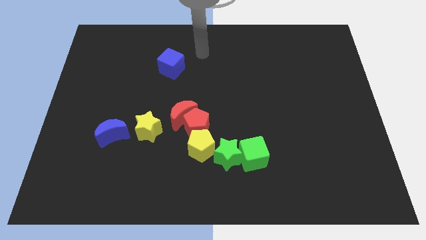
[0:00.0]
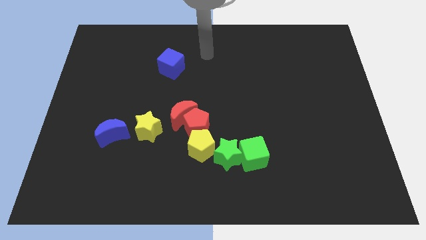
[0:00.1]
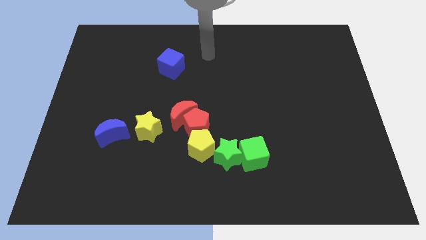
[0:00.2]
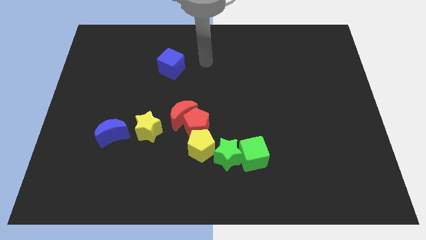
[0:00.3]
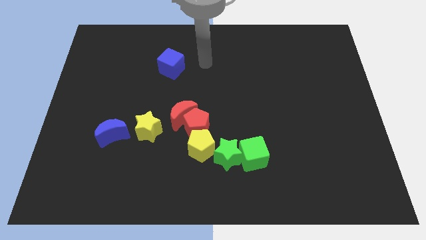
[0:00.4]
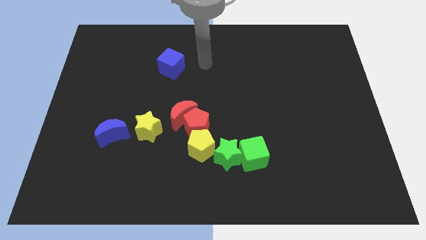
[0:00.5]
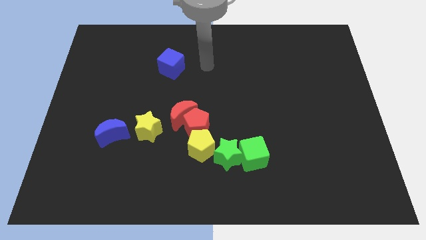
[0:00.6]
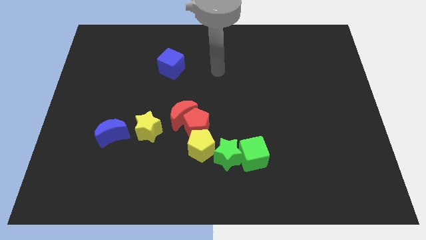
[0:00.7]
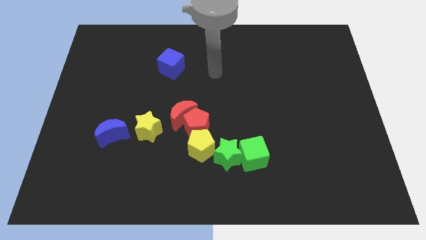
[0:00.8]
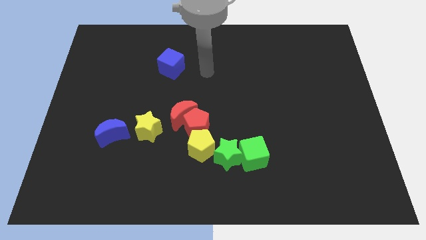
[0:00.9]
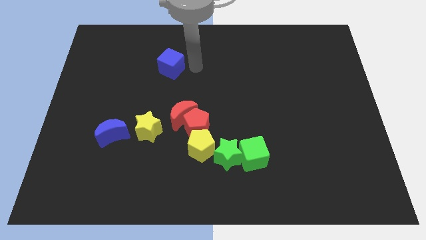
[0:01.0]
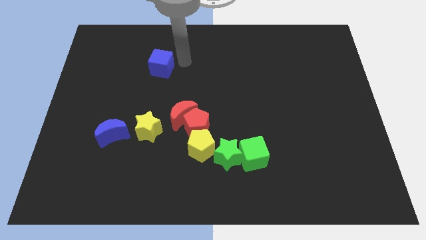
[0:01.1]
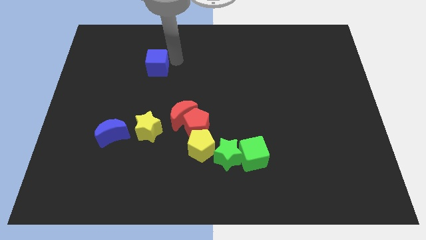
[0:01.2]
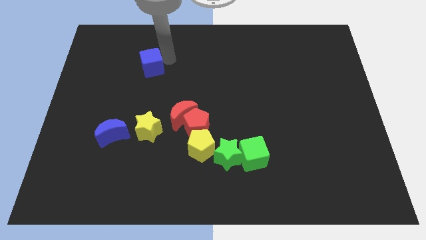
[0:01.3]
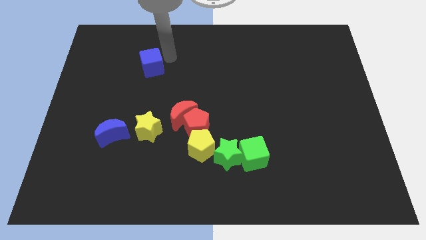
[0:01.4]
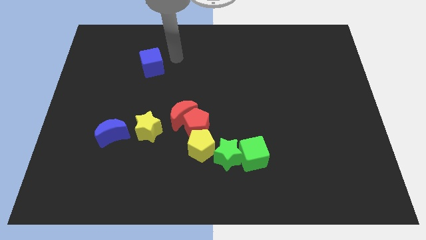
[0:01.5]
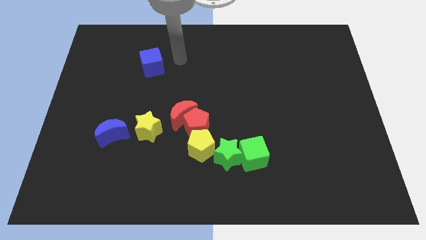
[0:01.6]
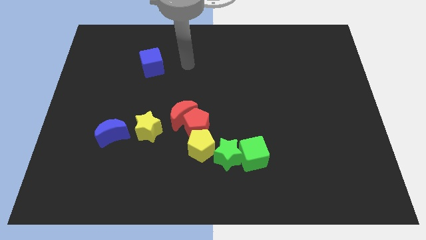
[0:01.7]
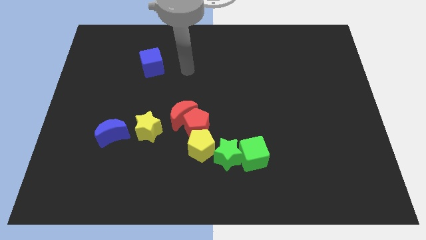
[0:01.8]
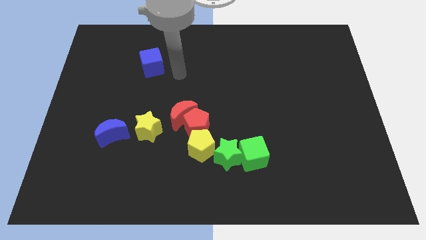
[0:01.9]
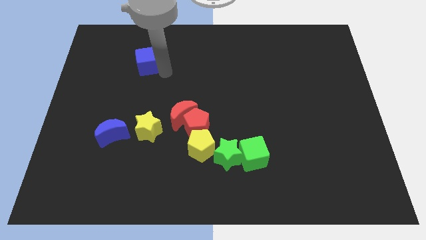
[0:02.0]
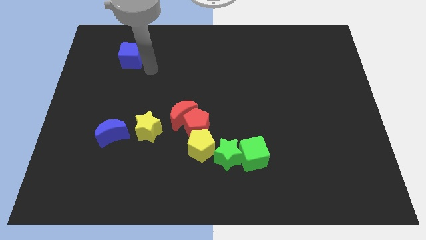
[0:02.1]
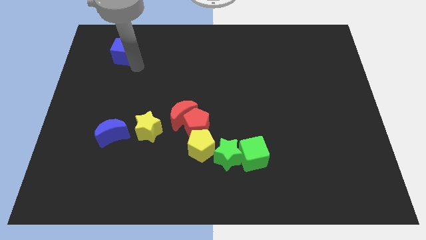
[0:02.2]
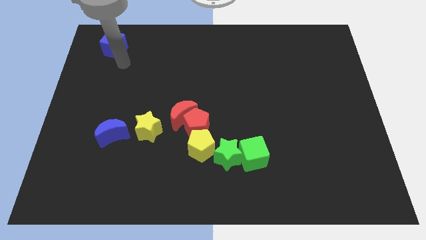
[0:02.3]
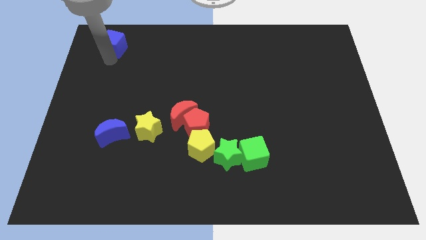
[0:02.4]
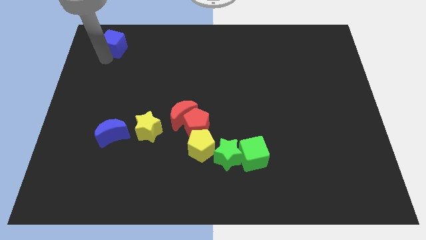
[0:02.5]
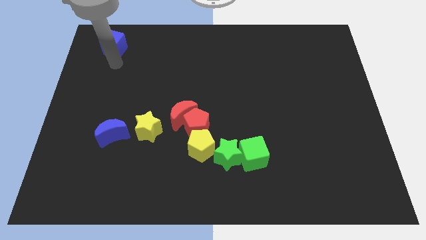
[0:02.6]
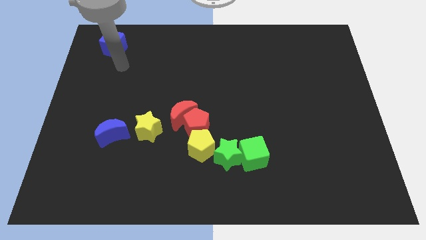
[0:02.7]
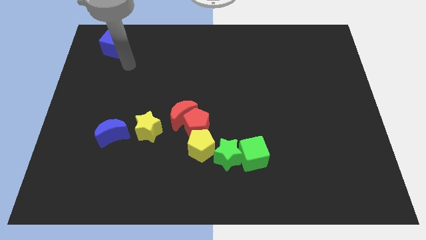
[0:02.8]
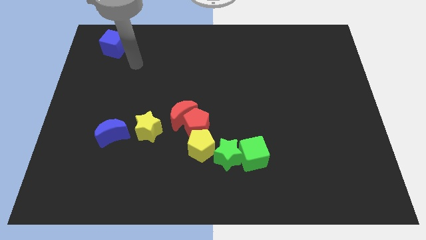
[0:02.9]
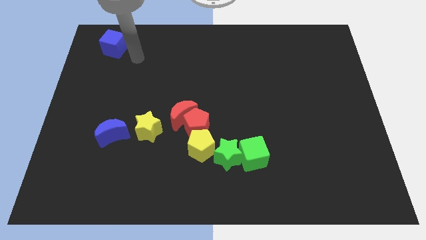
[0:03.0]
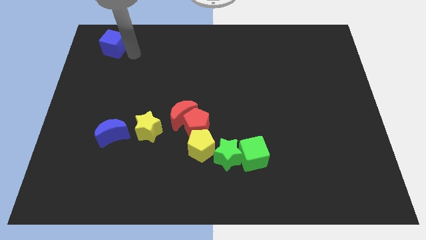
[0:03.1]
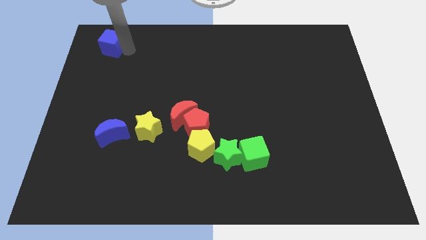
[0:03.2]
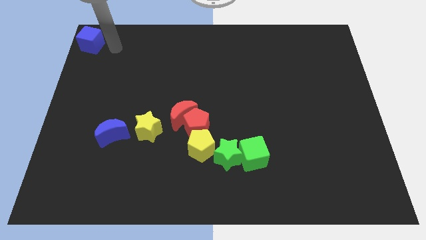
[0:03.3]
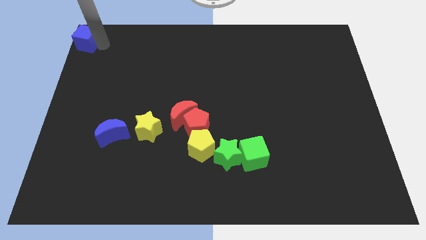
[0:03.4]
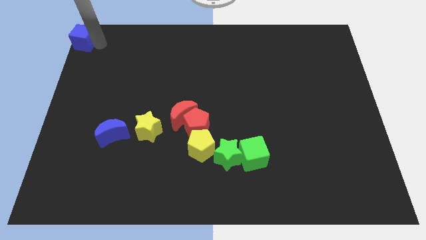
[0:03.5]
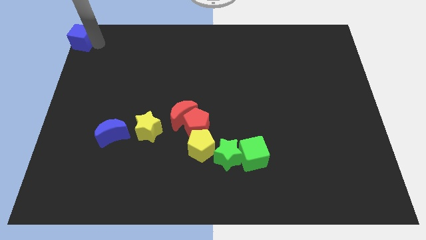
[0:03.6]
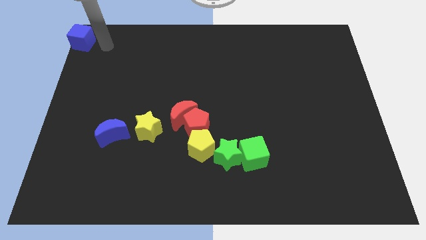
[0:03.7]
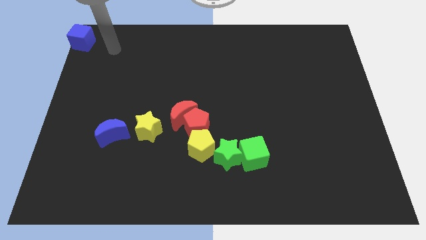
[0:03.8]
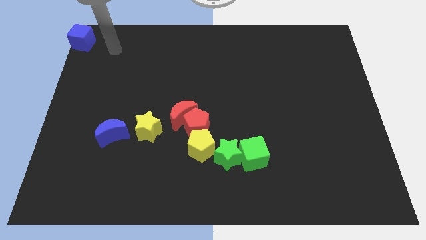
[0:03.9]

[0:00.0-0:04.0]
move the blue cube to the top left corner of the board

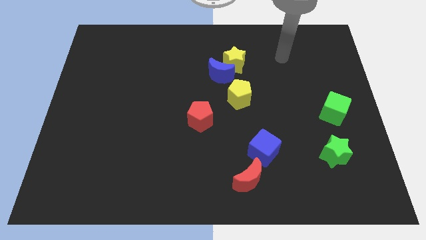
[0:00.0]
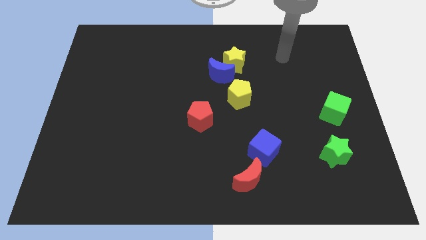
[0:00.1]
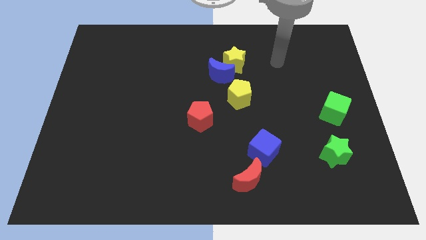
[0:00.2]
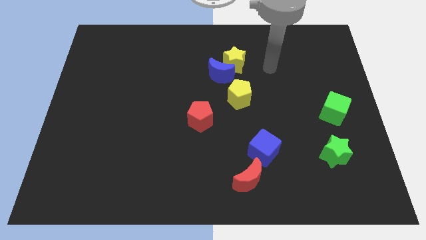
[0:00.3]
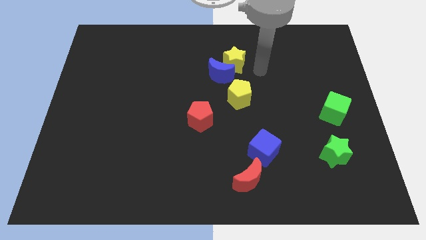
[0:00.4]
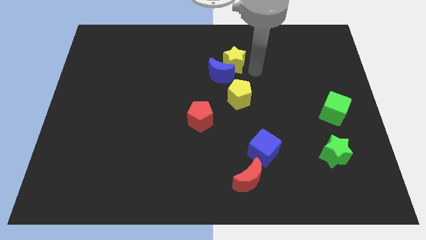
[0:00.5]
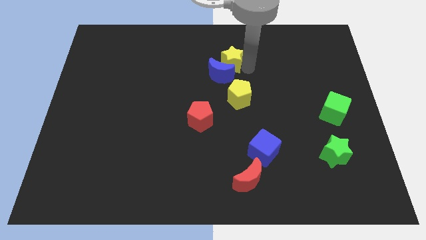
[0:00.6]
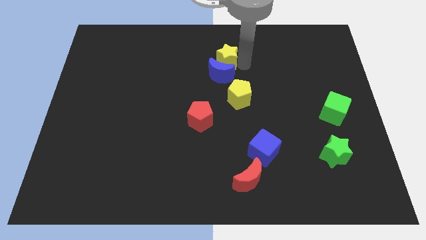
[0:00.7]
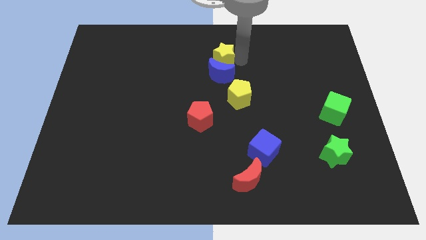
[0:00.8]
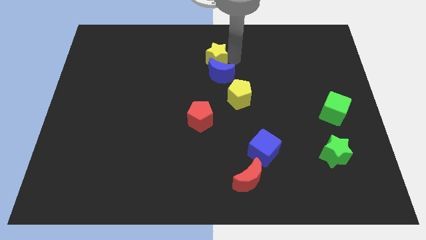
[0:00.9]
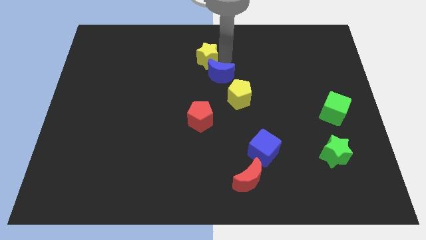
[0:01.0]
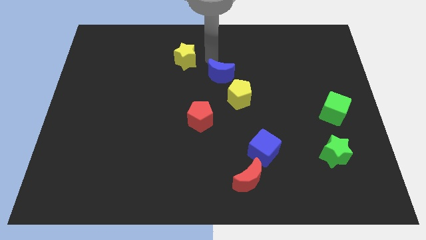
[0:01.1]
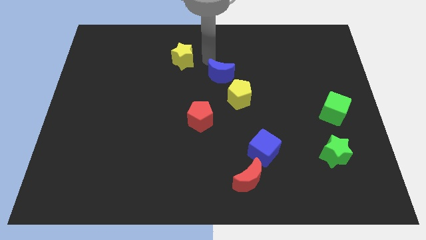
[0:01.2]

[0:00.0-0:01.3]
move the yellow star diagonal to the blue moon

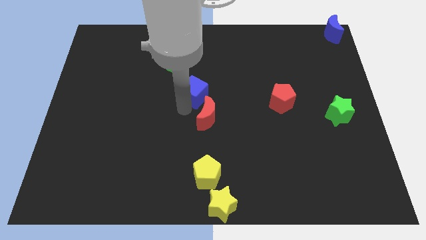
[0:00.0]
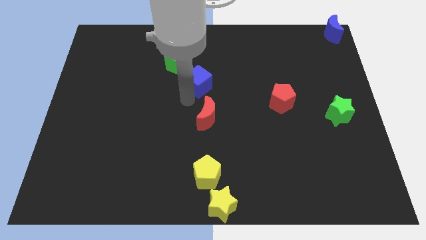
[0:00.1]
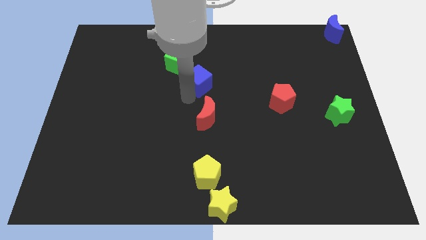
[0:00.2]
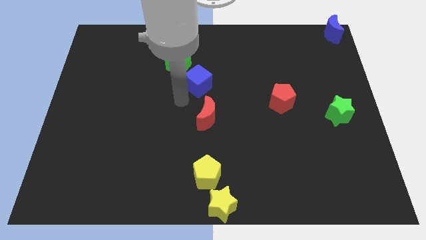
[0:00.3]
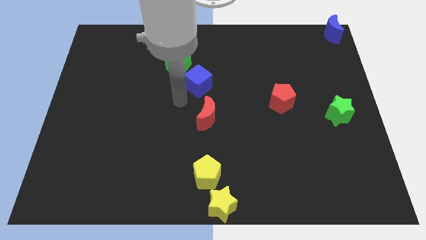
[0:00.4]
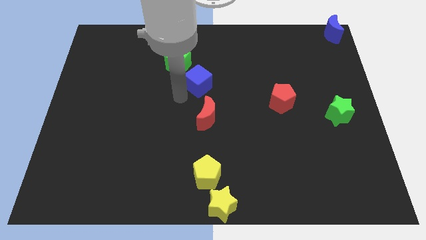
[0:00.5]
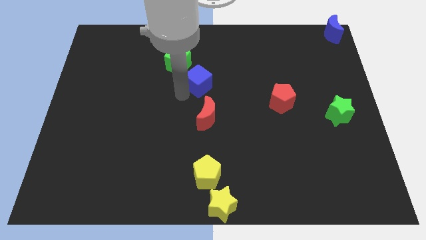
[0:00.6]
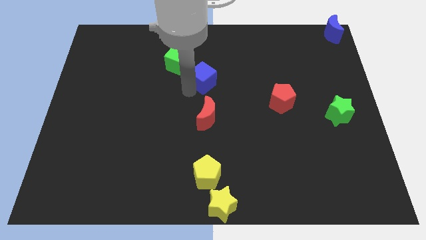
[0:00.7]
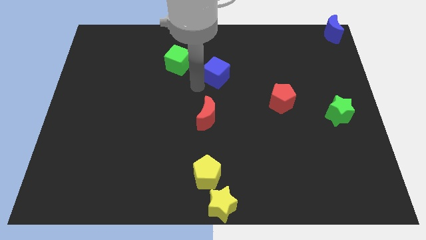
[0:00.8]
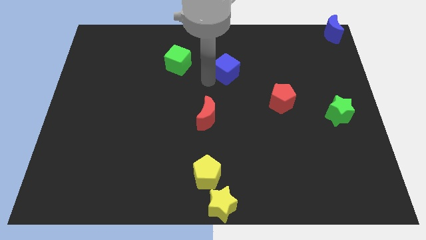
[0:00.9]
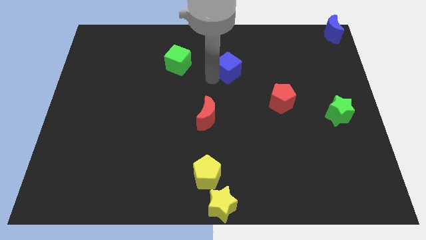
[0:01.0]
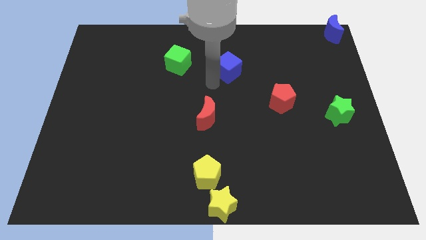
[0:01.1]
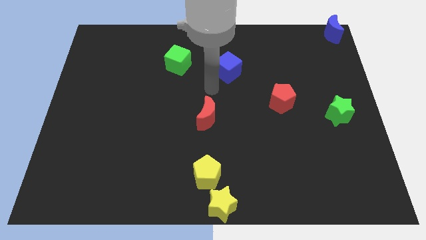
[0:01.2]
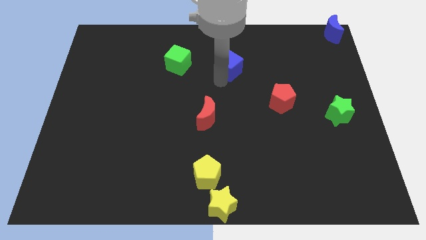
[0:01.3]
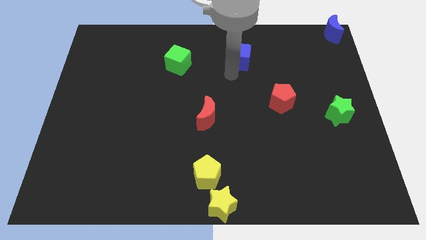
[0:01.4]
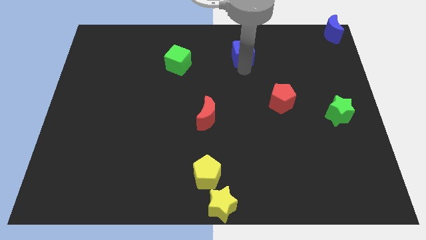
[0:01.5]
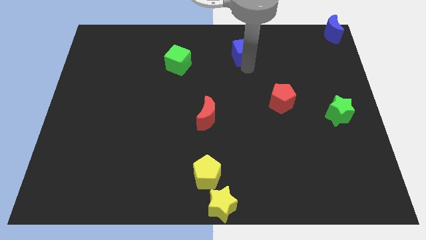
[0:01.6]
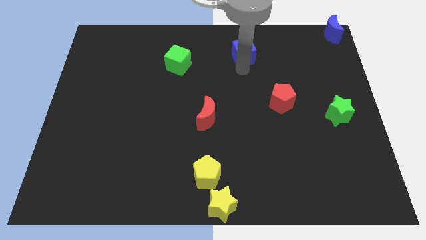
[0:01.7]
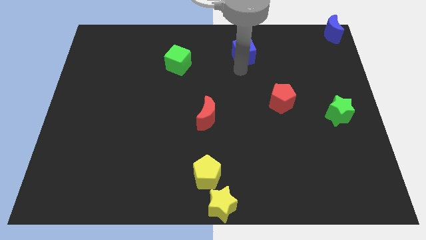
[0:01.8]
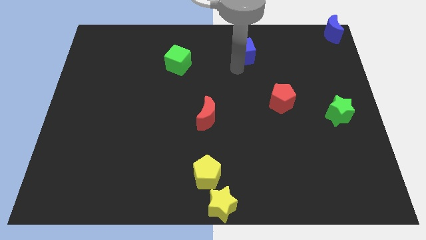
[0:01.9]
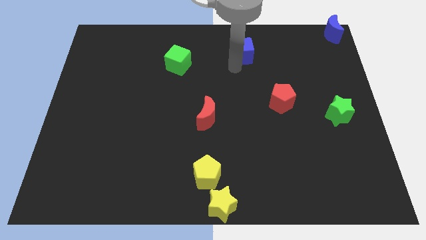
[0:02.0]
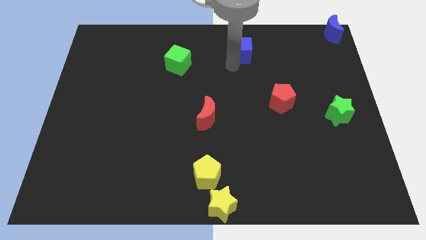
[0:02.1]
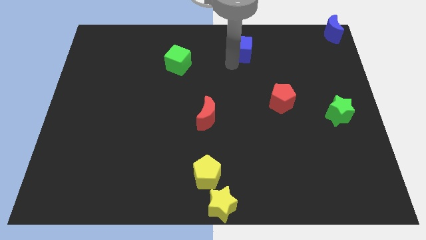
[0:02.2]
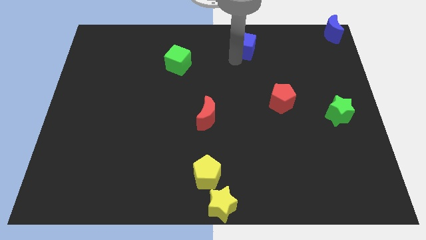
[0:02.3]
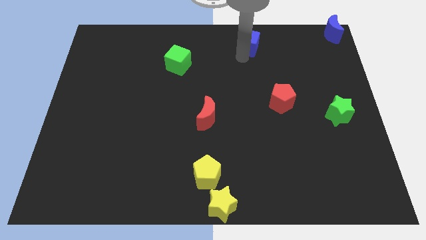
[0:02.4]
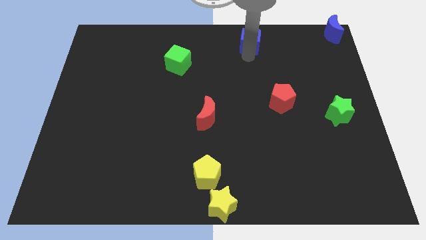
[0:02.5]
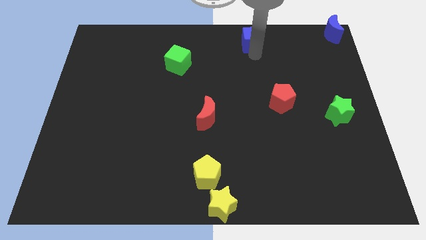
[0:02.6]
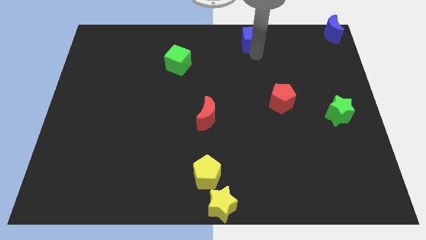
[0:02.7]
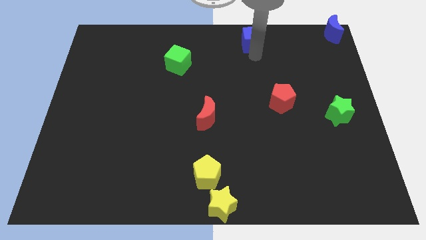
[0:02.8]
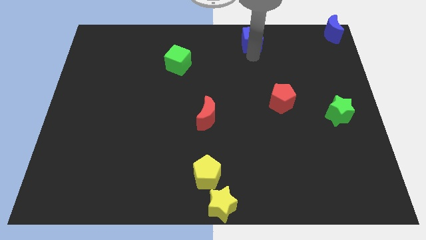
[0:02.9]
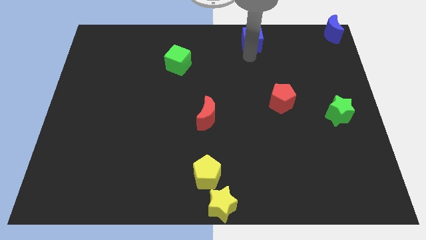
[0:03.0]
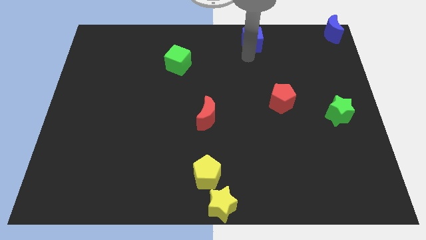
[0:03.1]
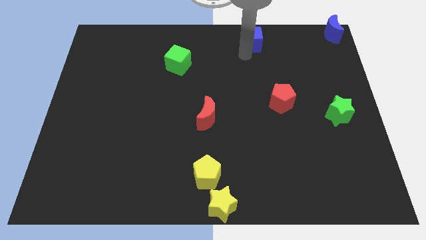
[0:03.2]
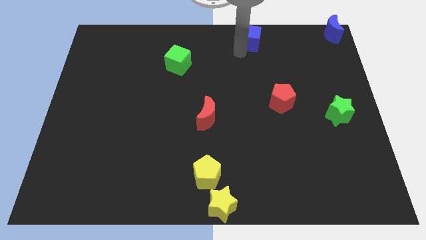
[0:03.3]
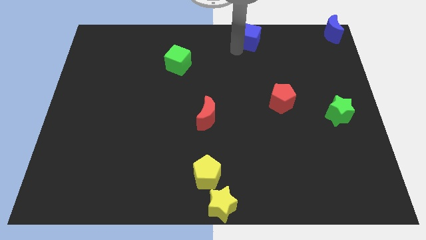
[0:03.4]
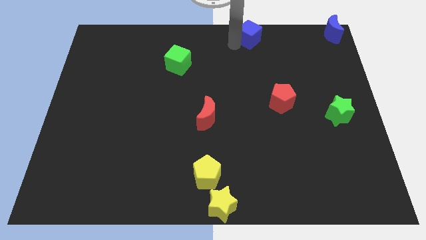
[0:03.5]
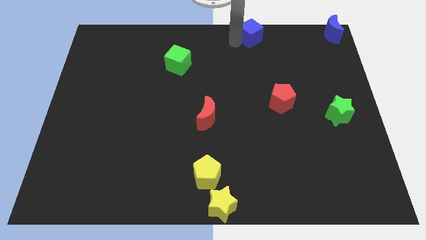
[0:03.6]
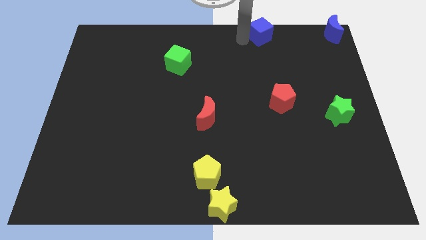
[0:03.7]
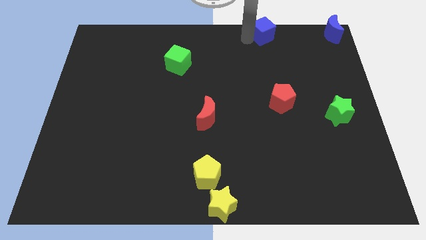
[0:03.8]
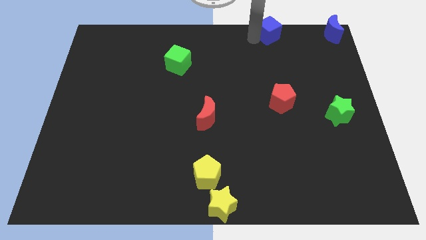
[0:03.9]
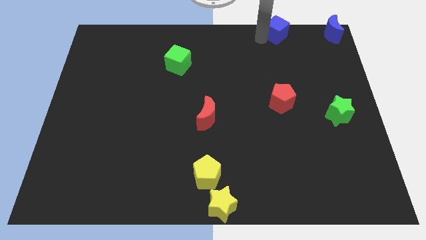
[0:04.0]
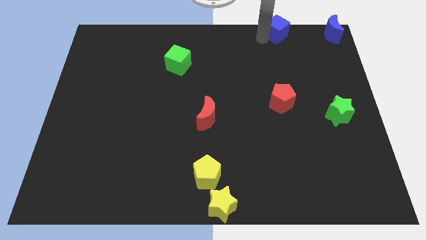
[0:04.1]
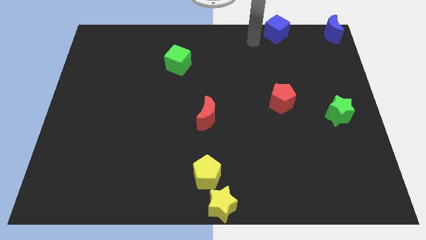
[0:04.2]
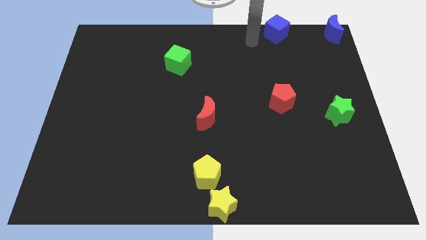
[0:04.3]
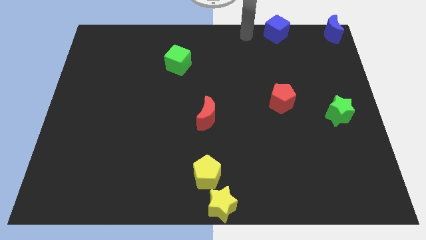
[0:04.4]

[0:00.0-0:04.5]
push the blue cube to the vertical top of the red pentagon
